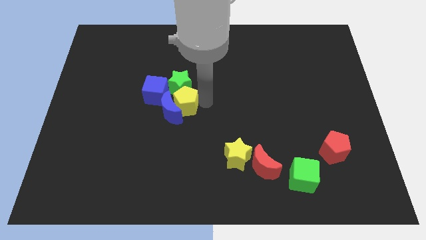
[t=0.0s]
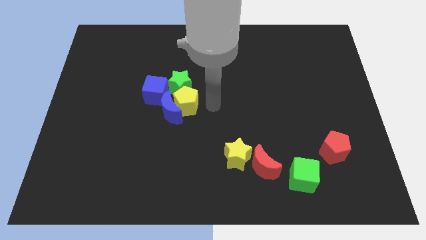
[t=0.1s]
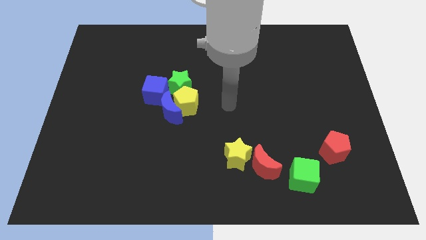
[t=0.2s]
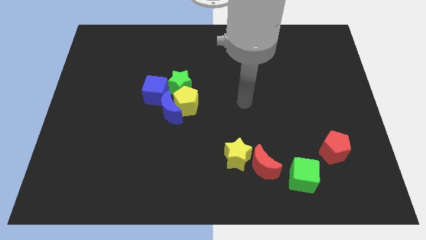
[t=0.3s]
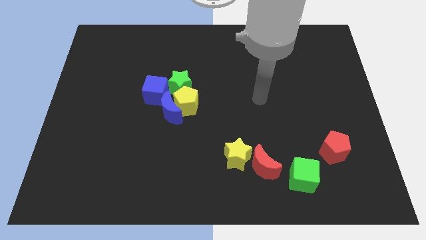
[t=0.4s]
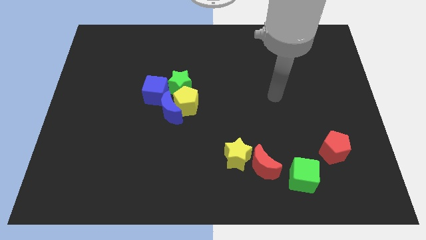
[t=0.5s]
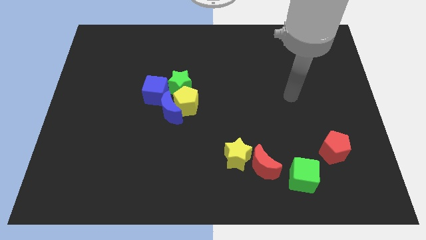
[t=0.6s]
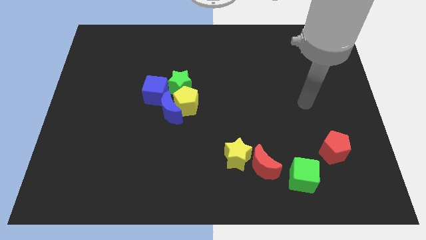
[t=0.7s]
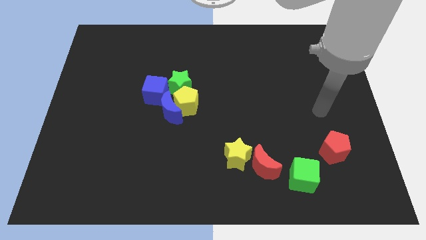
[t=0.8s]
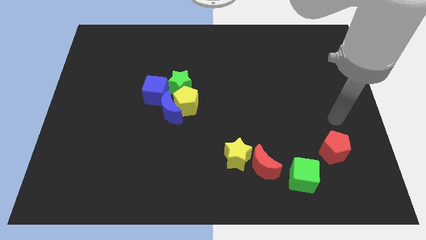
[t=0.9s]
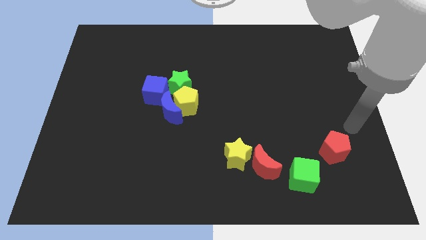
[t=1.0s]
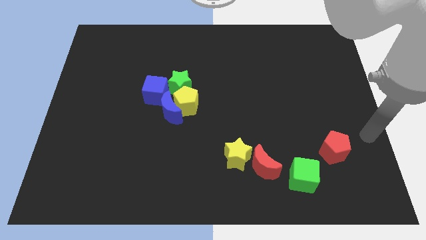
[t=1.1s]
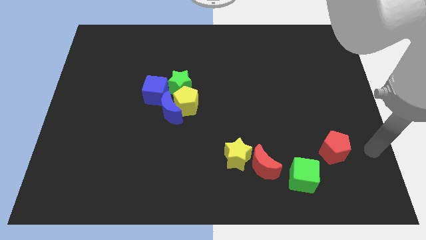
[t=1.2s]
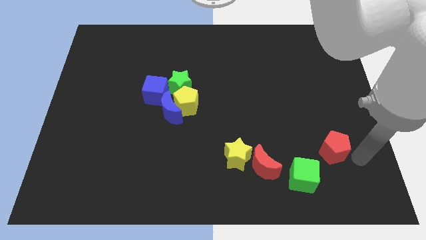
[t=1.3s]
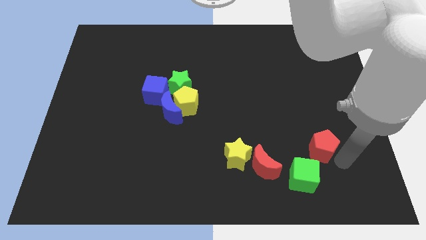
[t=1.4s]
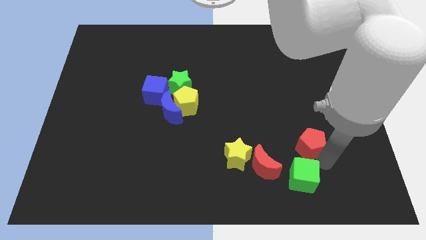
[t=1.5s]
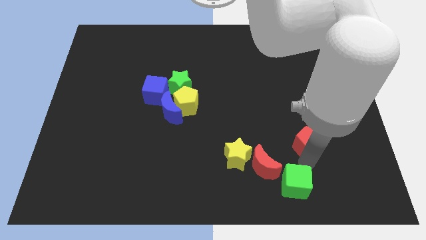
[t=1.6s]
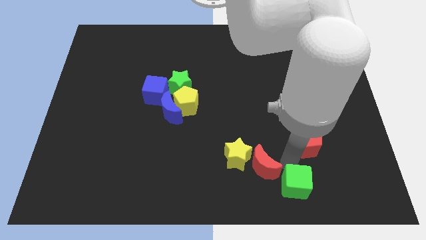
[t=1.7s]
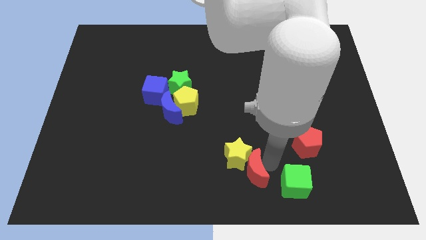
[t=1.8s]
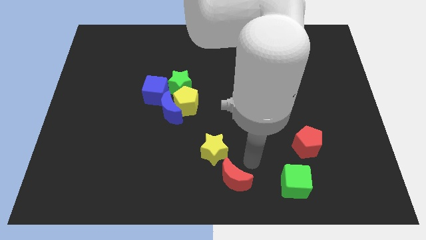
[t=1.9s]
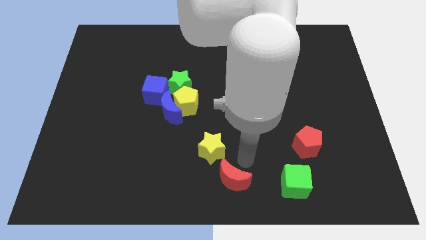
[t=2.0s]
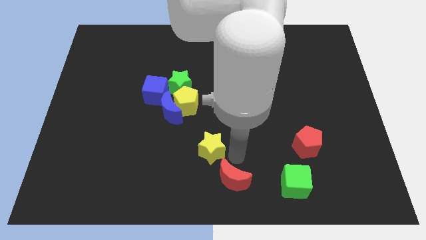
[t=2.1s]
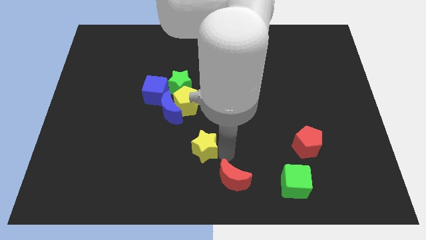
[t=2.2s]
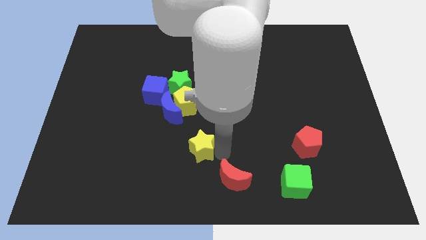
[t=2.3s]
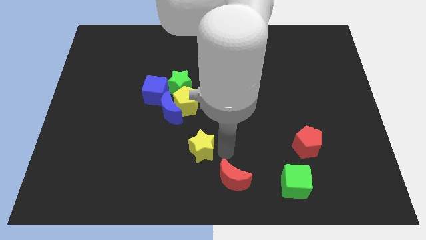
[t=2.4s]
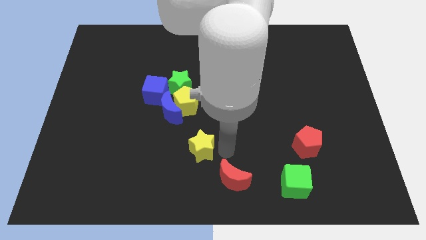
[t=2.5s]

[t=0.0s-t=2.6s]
push the red crescent to the left side of the green cube

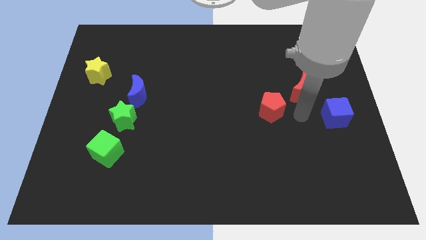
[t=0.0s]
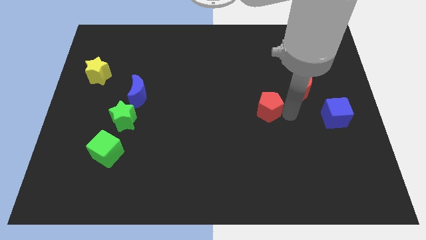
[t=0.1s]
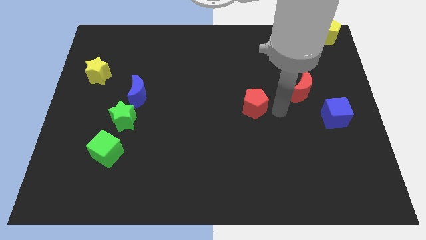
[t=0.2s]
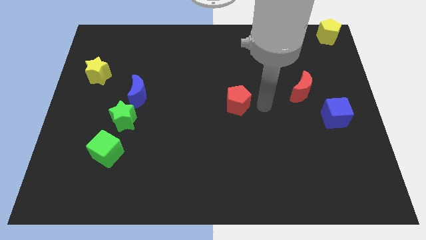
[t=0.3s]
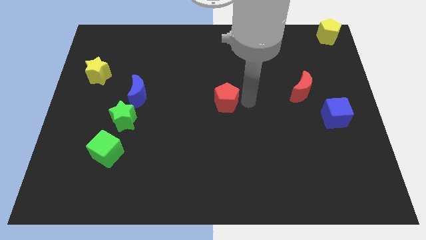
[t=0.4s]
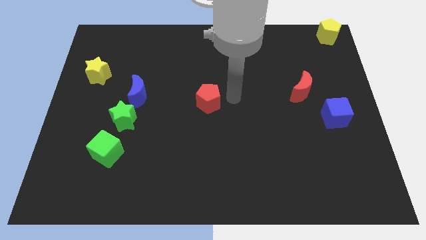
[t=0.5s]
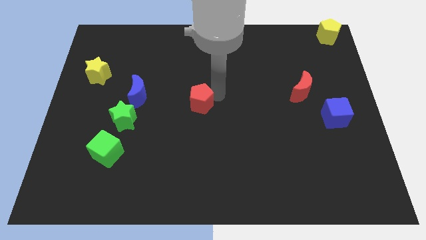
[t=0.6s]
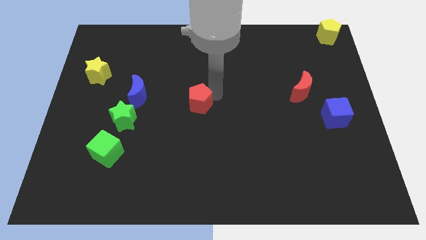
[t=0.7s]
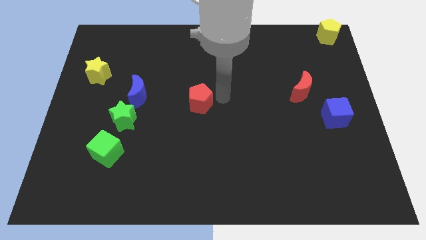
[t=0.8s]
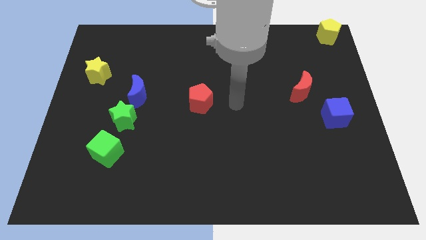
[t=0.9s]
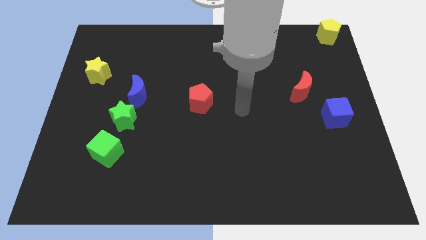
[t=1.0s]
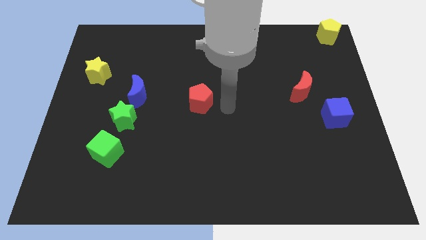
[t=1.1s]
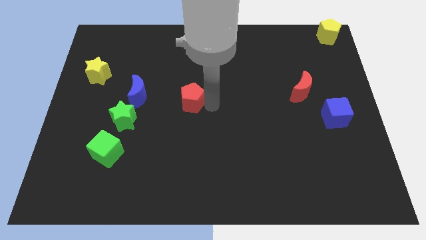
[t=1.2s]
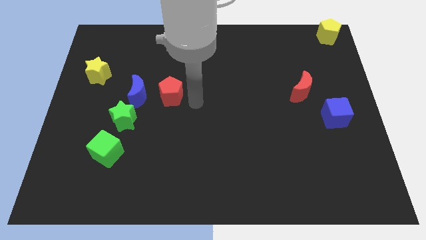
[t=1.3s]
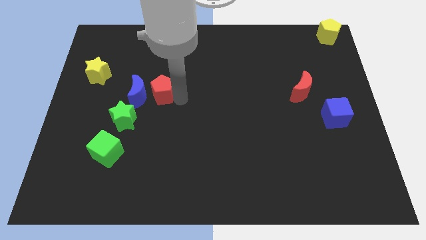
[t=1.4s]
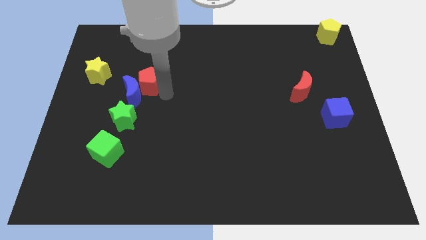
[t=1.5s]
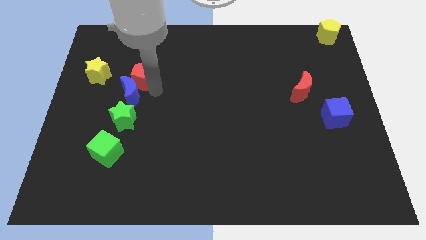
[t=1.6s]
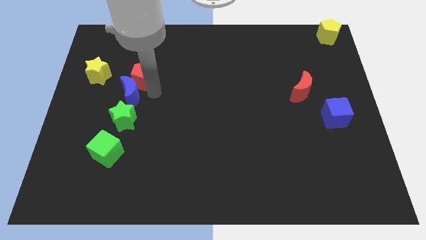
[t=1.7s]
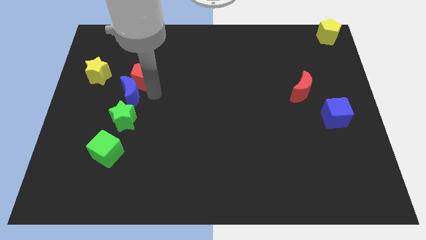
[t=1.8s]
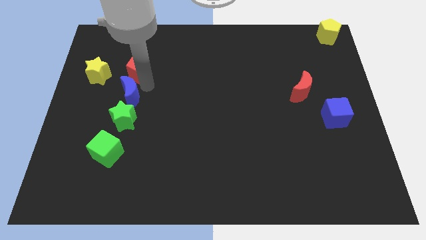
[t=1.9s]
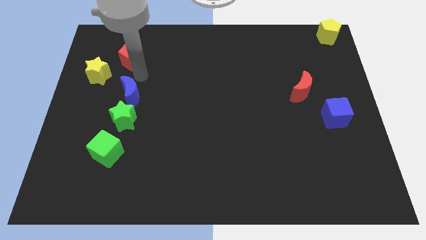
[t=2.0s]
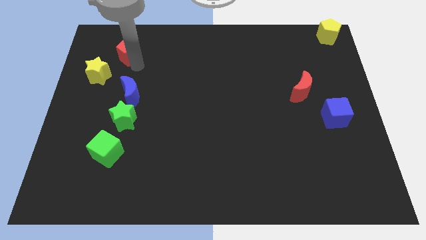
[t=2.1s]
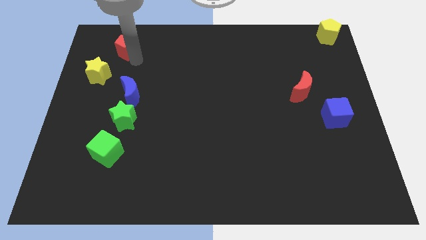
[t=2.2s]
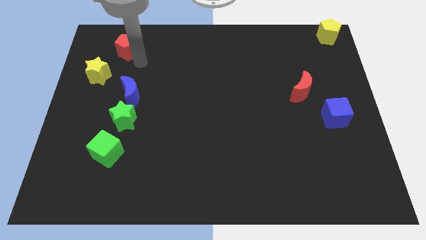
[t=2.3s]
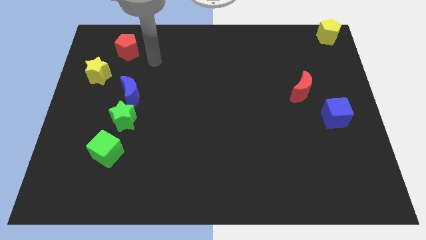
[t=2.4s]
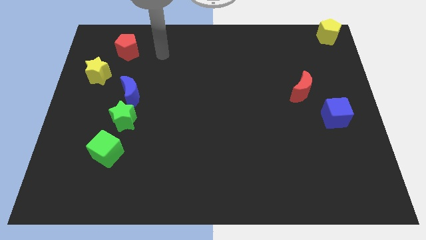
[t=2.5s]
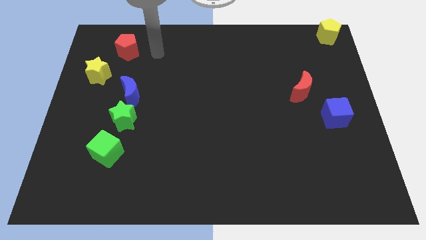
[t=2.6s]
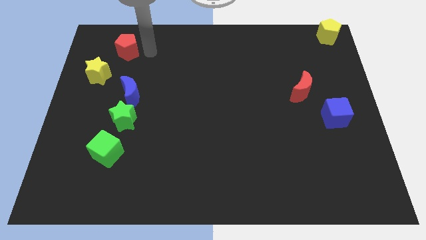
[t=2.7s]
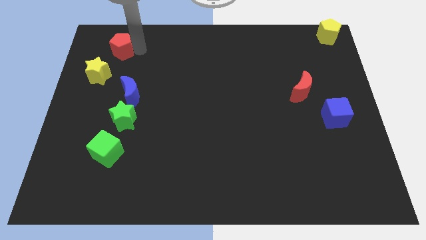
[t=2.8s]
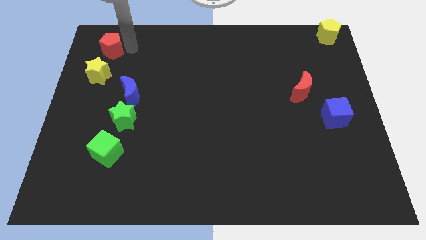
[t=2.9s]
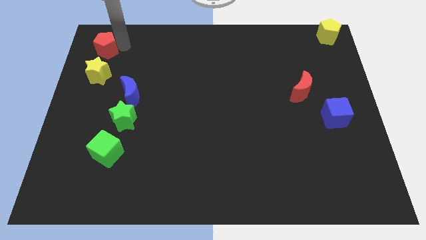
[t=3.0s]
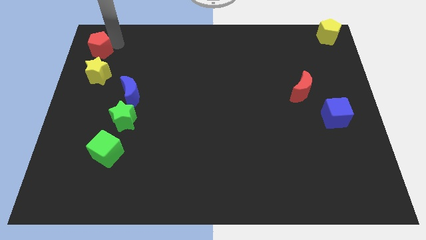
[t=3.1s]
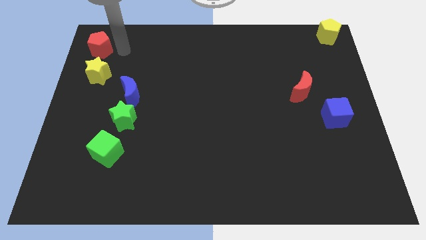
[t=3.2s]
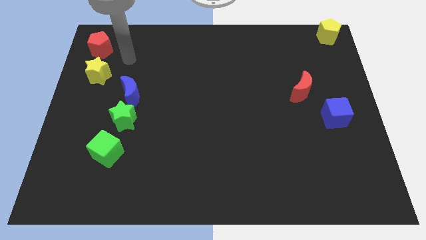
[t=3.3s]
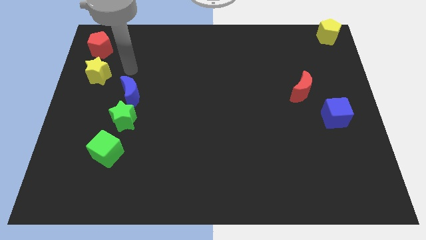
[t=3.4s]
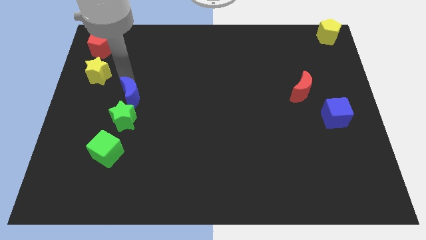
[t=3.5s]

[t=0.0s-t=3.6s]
place the red pentagon above the yellow star

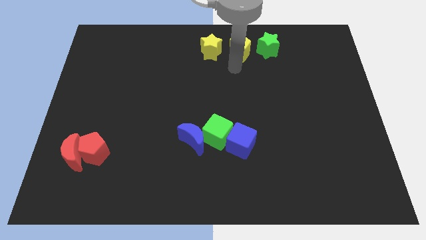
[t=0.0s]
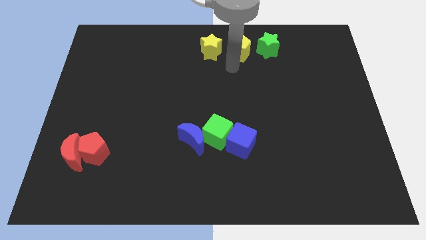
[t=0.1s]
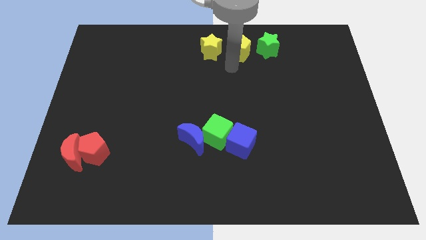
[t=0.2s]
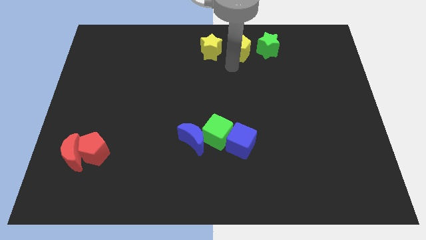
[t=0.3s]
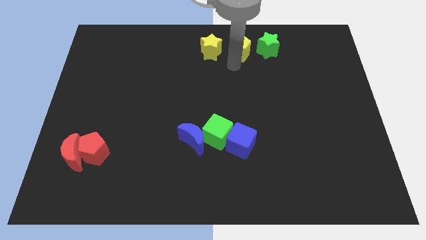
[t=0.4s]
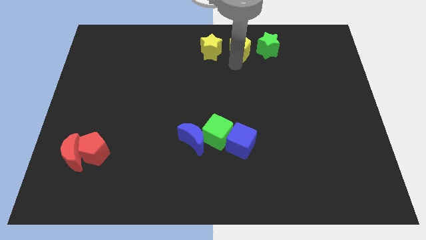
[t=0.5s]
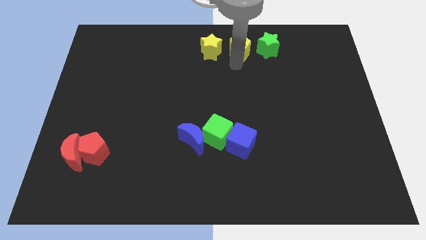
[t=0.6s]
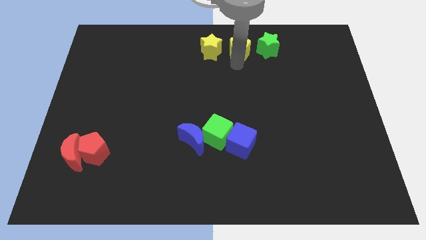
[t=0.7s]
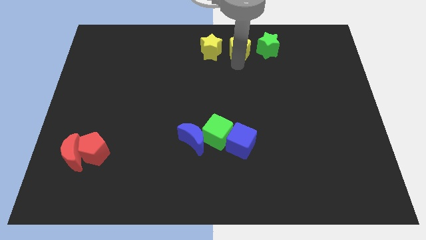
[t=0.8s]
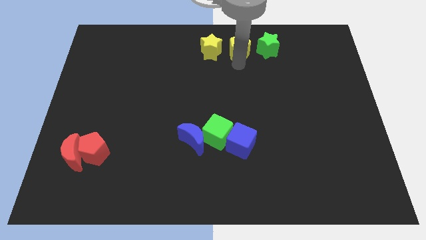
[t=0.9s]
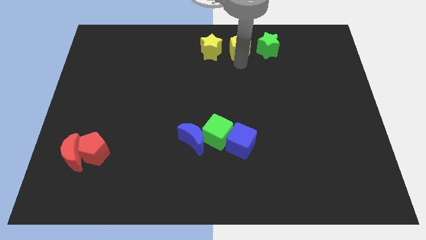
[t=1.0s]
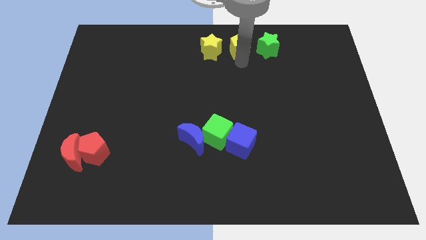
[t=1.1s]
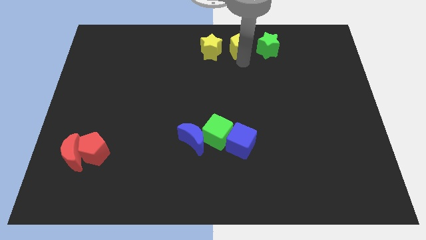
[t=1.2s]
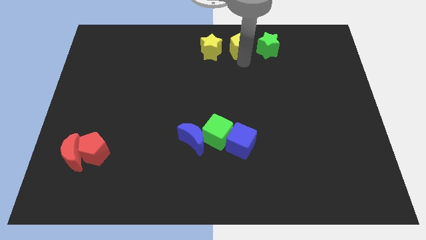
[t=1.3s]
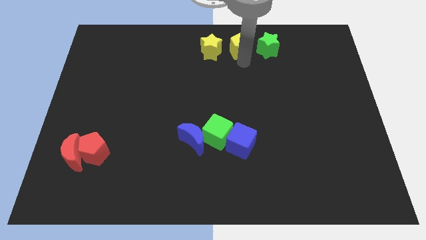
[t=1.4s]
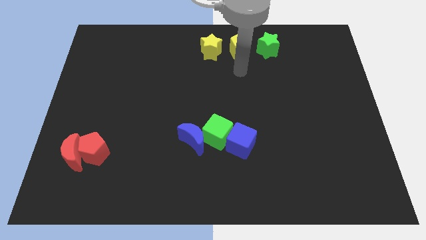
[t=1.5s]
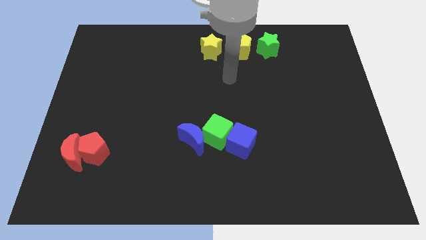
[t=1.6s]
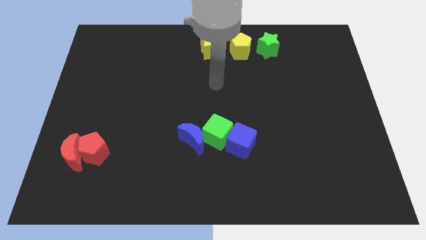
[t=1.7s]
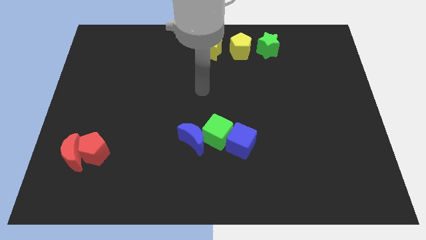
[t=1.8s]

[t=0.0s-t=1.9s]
place the yellow pentagon in between the green star and yellow star

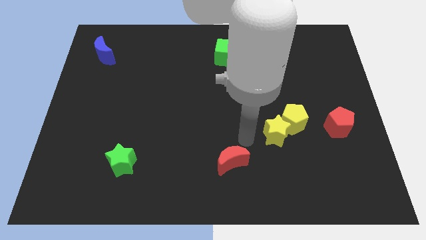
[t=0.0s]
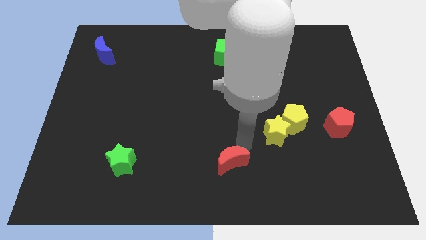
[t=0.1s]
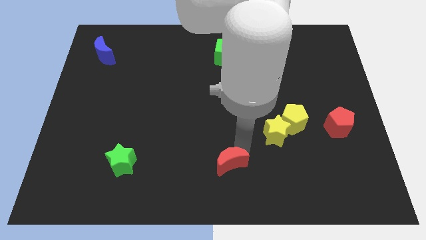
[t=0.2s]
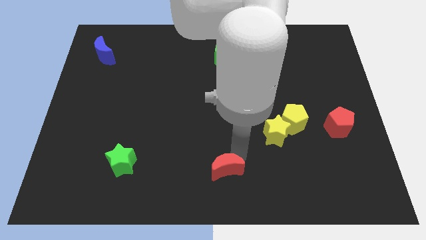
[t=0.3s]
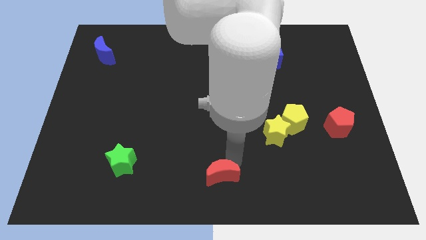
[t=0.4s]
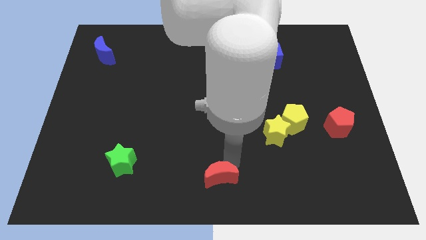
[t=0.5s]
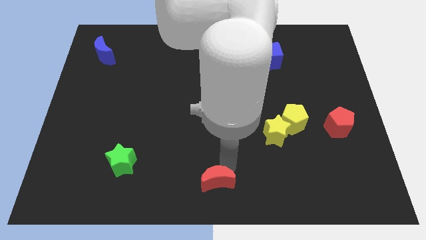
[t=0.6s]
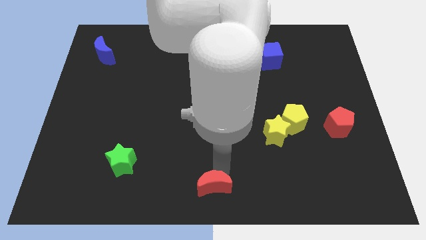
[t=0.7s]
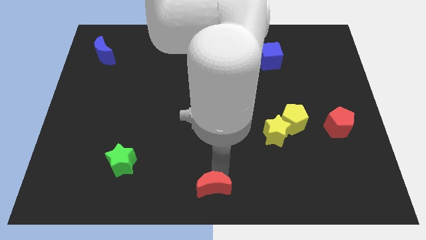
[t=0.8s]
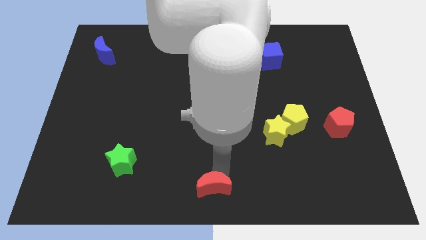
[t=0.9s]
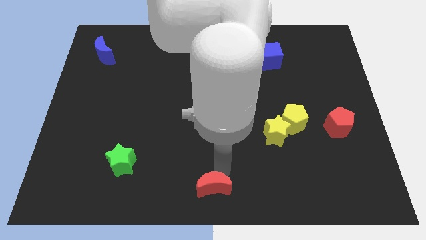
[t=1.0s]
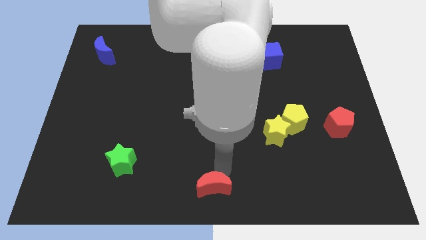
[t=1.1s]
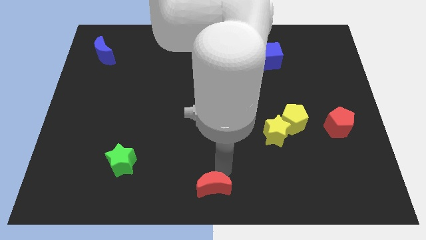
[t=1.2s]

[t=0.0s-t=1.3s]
push the red crescent diagonally to yellow star
